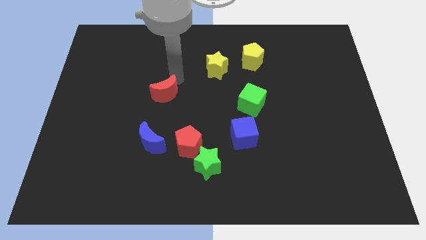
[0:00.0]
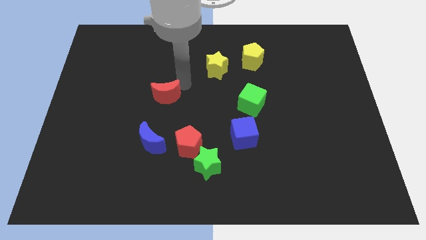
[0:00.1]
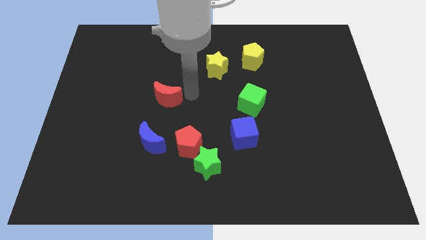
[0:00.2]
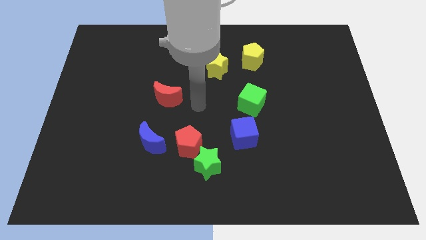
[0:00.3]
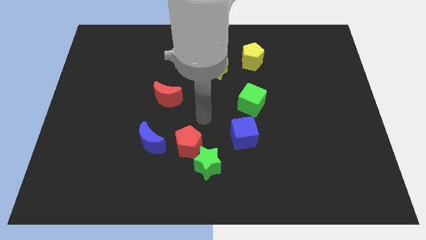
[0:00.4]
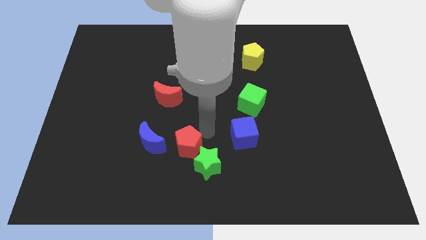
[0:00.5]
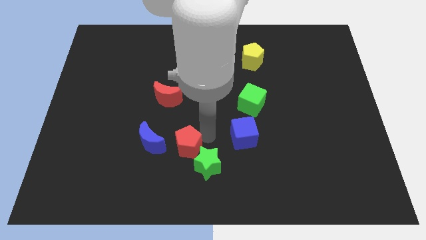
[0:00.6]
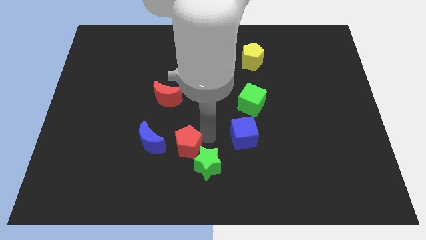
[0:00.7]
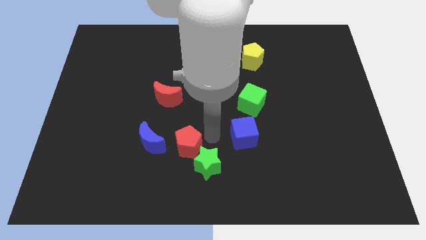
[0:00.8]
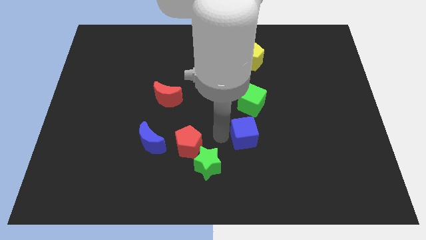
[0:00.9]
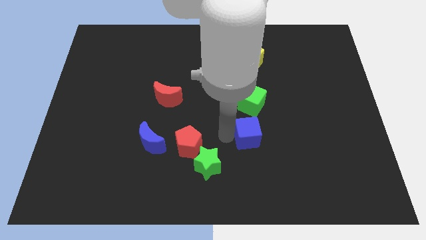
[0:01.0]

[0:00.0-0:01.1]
tap the blue cube

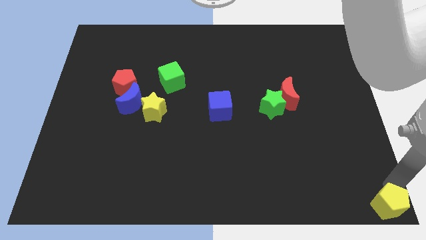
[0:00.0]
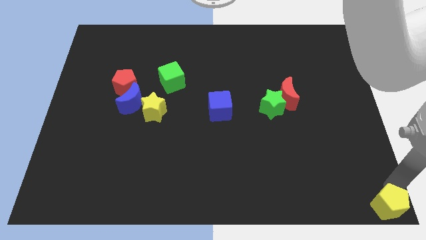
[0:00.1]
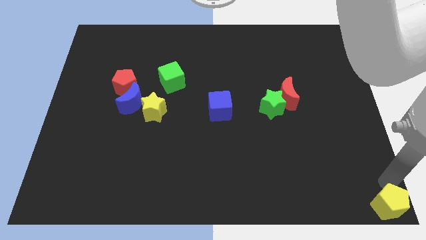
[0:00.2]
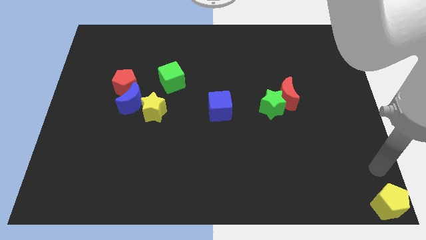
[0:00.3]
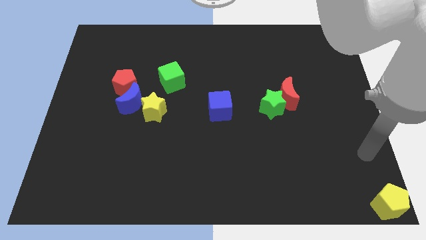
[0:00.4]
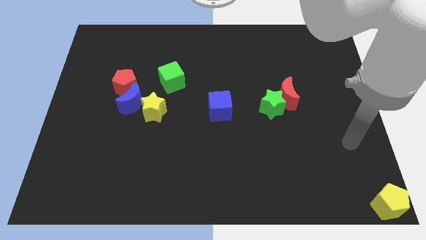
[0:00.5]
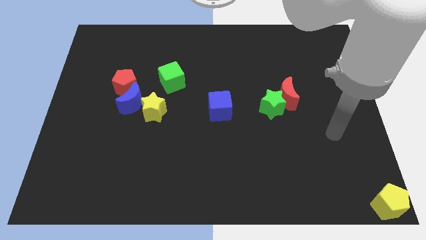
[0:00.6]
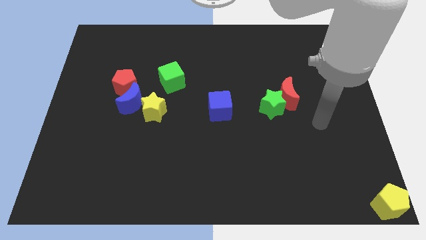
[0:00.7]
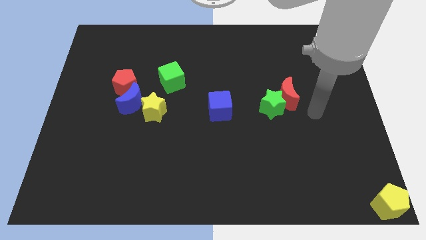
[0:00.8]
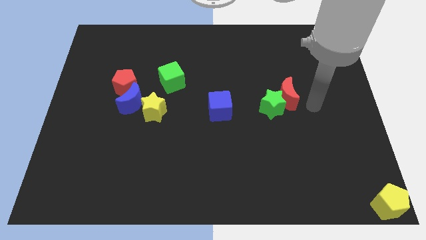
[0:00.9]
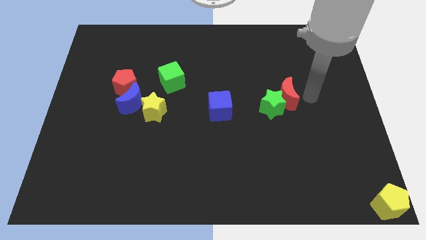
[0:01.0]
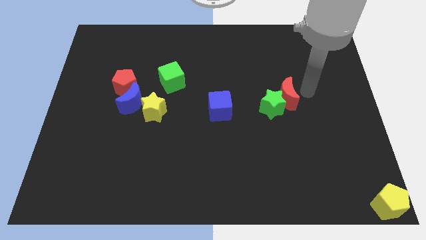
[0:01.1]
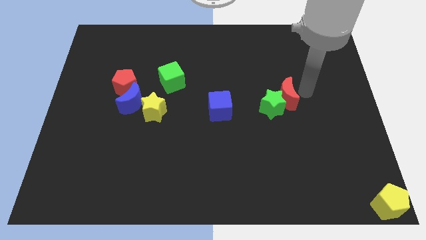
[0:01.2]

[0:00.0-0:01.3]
place your arm to the right of red moon

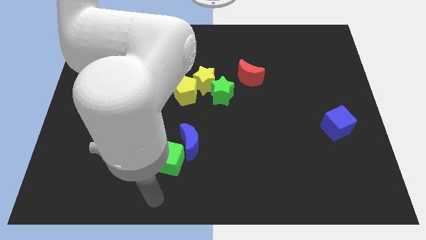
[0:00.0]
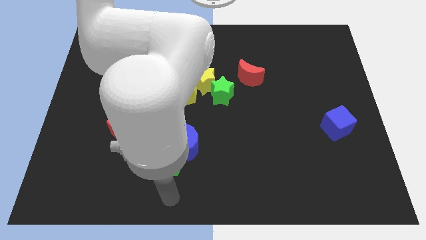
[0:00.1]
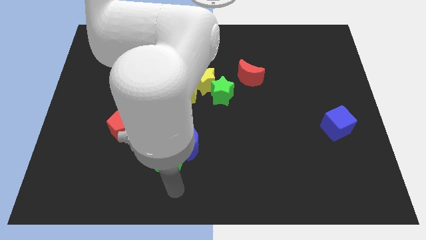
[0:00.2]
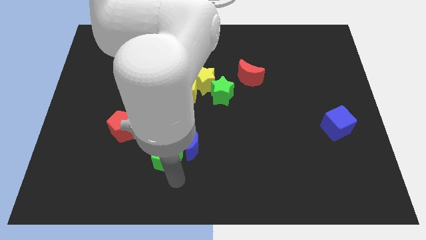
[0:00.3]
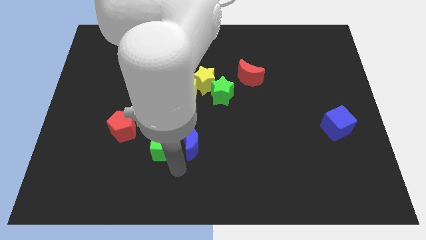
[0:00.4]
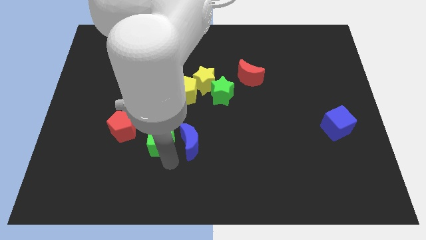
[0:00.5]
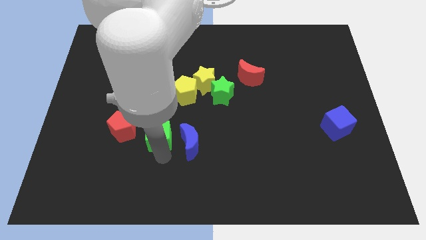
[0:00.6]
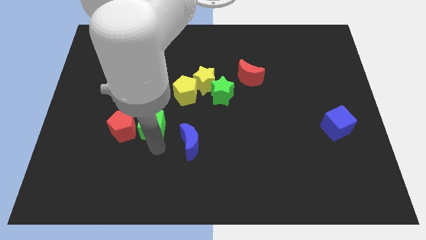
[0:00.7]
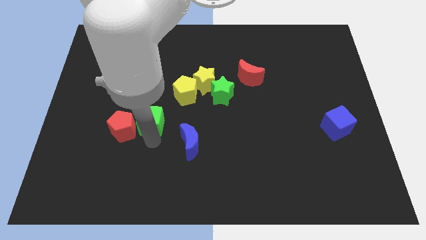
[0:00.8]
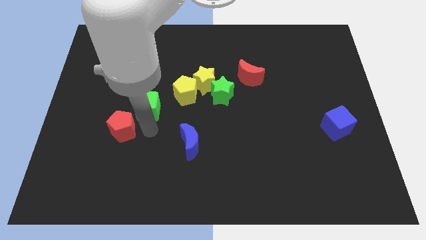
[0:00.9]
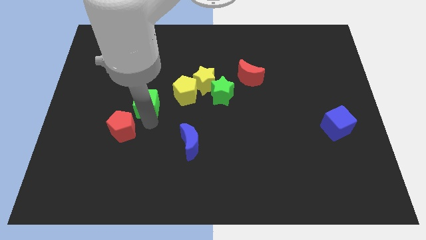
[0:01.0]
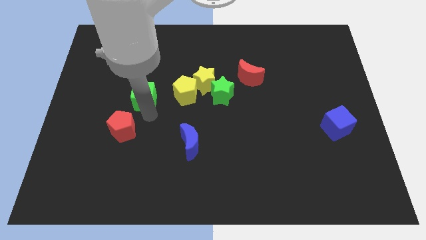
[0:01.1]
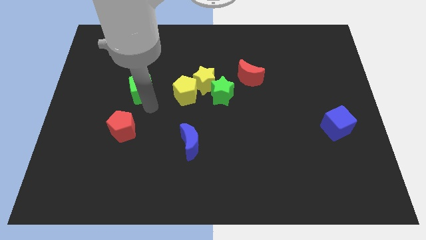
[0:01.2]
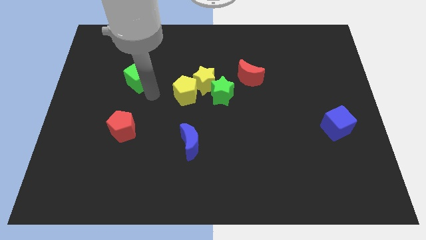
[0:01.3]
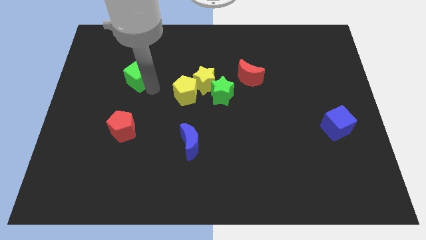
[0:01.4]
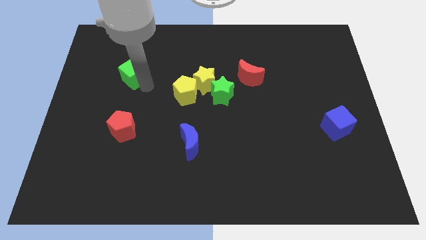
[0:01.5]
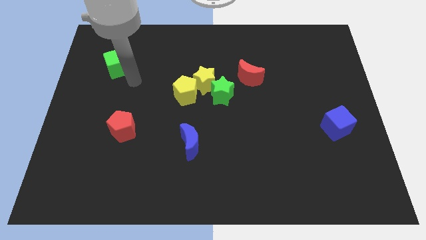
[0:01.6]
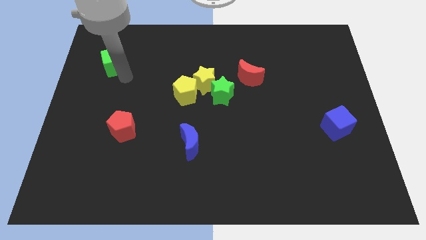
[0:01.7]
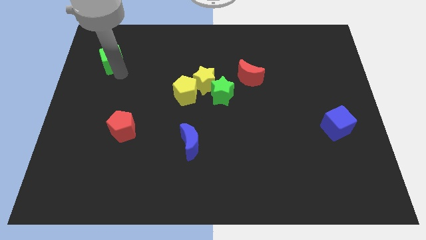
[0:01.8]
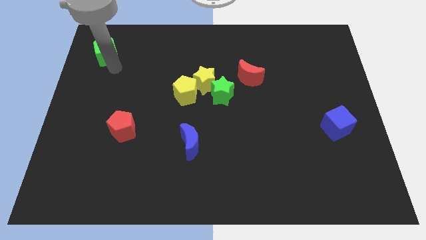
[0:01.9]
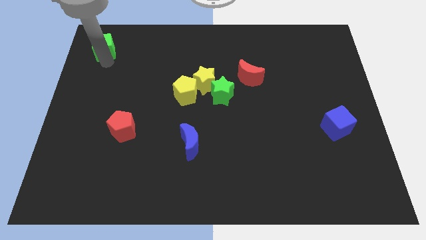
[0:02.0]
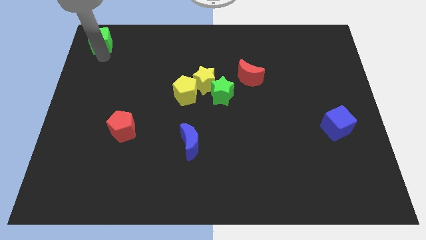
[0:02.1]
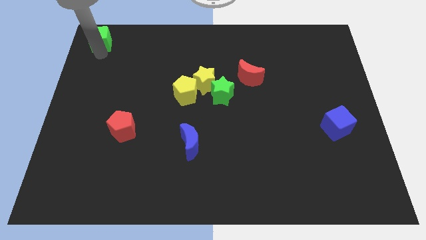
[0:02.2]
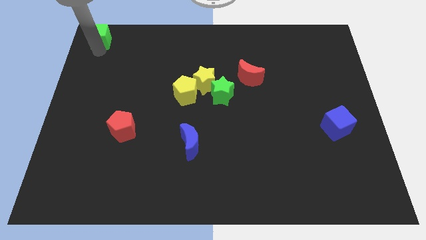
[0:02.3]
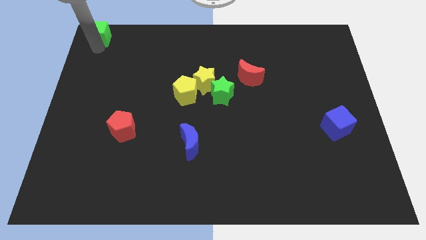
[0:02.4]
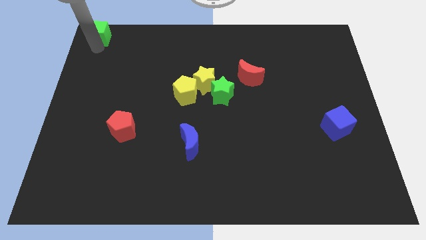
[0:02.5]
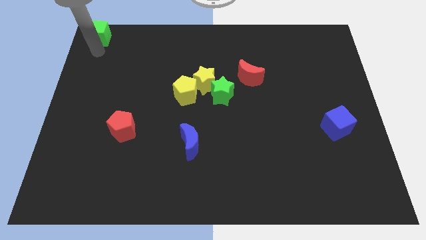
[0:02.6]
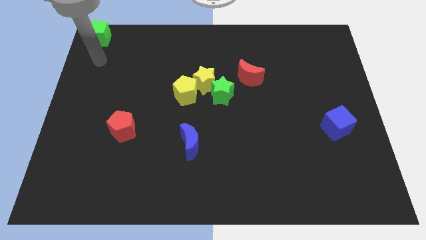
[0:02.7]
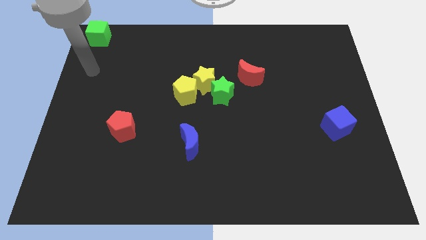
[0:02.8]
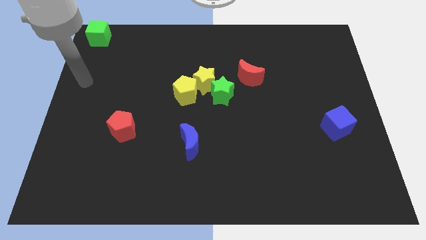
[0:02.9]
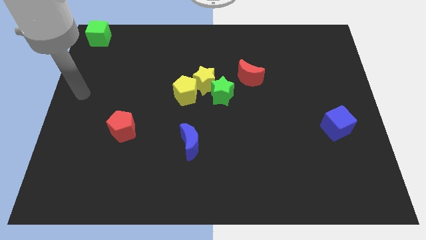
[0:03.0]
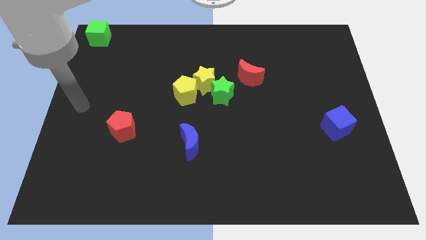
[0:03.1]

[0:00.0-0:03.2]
move green cube to the left top

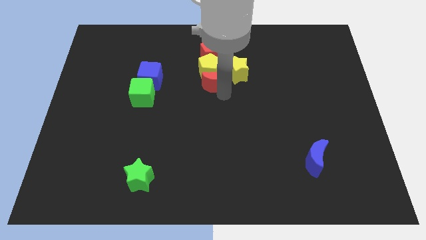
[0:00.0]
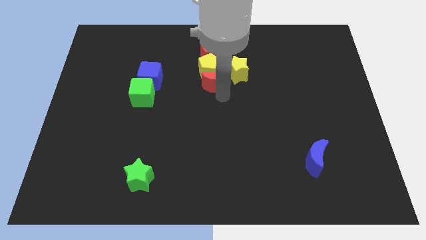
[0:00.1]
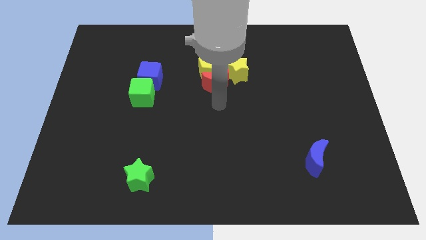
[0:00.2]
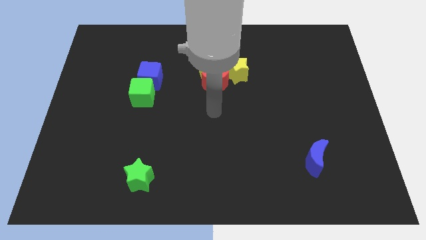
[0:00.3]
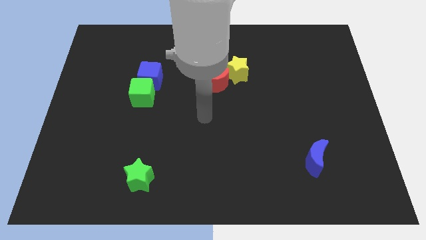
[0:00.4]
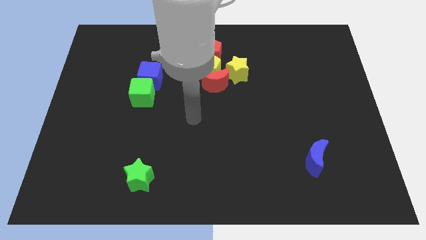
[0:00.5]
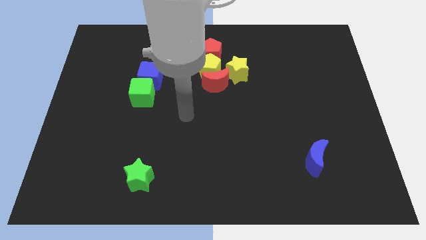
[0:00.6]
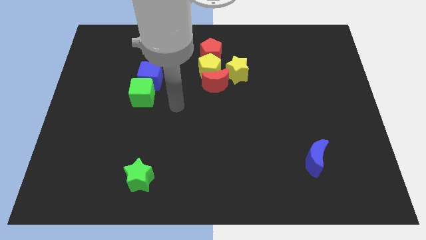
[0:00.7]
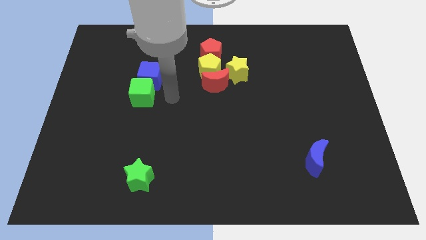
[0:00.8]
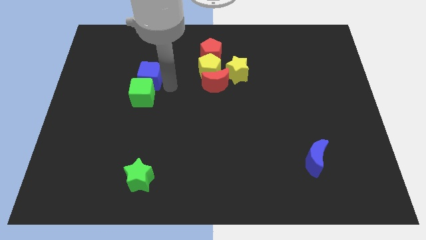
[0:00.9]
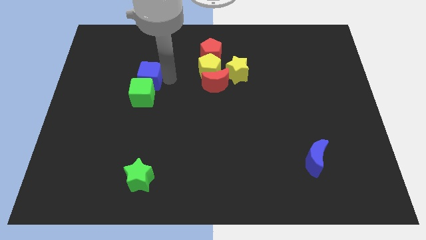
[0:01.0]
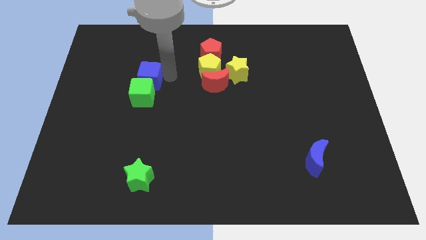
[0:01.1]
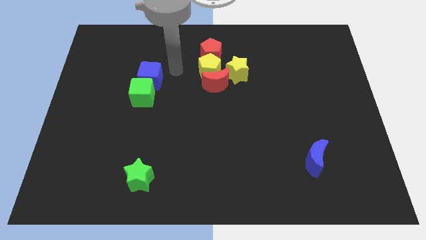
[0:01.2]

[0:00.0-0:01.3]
move your arm away from the red moon

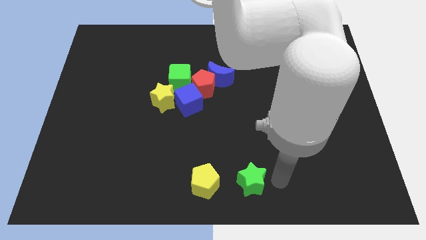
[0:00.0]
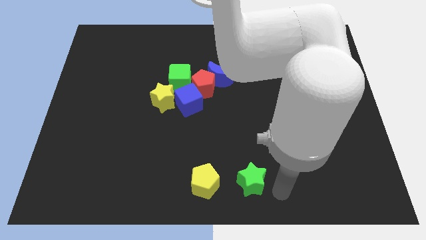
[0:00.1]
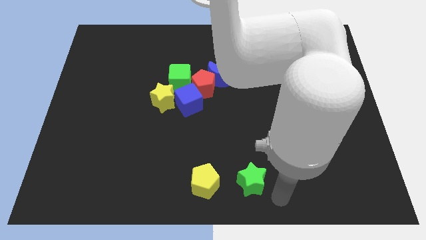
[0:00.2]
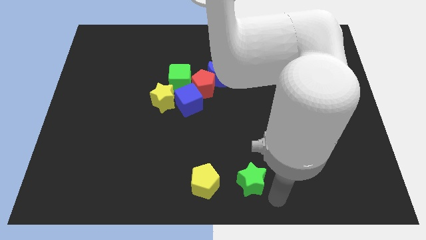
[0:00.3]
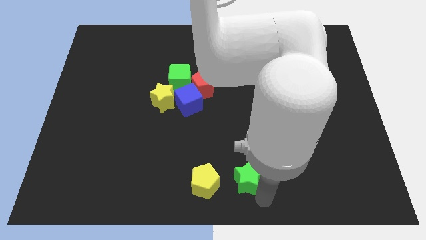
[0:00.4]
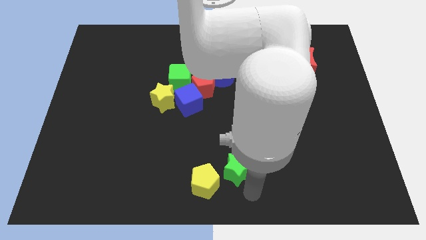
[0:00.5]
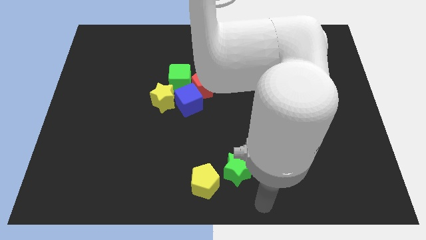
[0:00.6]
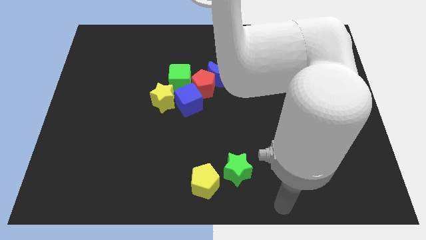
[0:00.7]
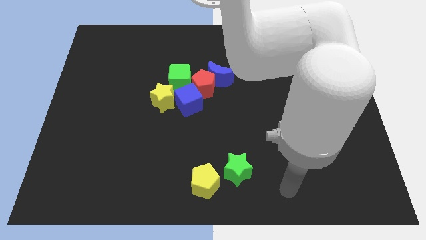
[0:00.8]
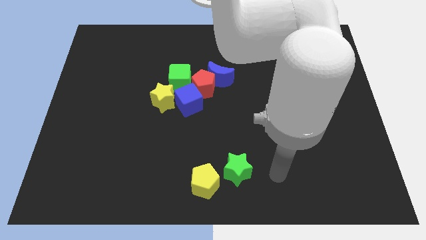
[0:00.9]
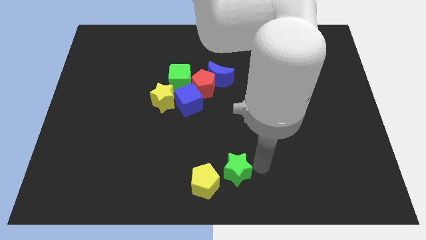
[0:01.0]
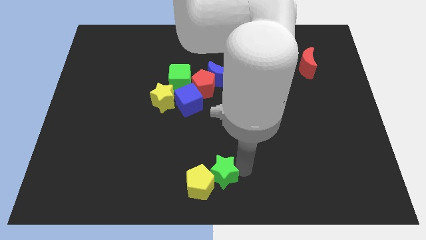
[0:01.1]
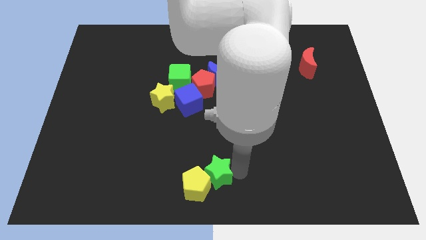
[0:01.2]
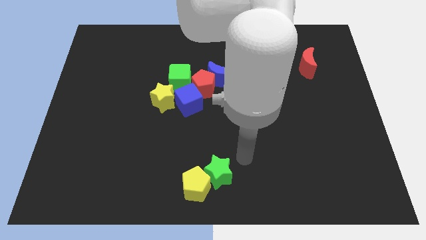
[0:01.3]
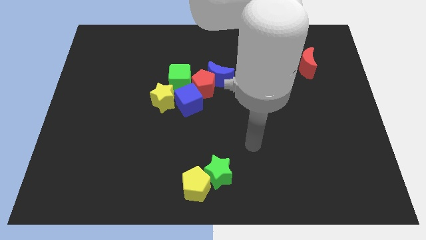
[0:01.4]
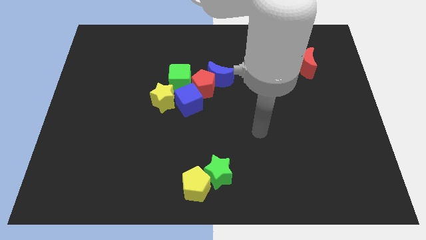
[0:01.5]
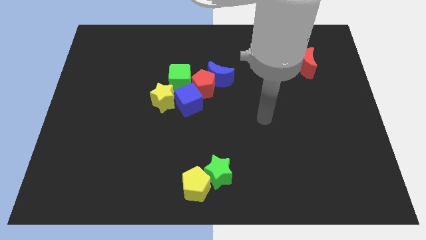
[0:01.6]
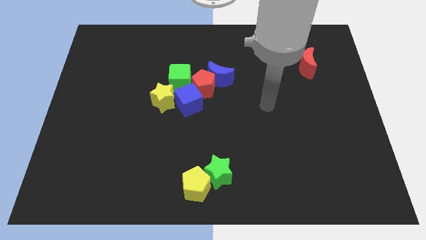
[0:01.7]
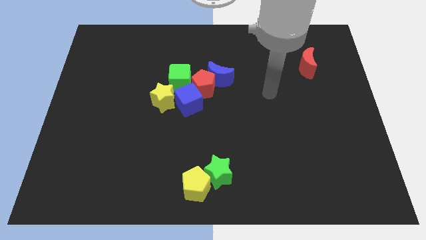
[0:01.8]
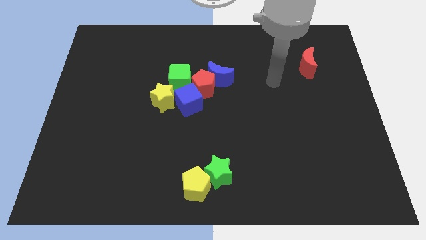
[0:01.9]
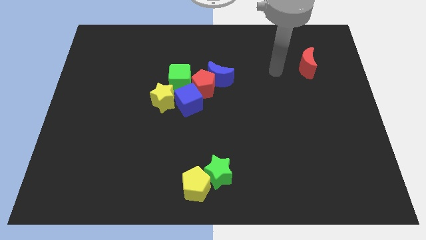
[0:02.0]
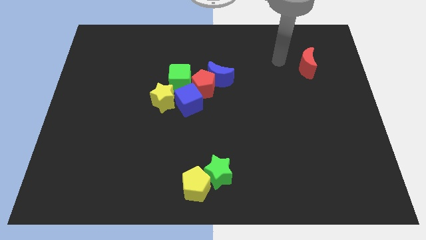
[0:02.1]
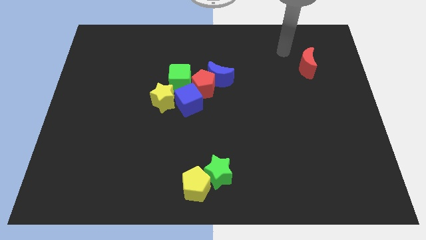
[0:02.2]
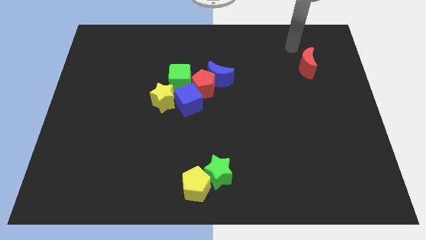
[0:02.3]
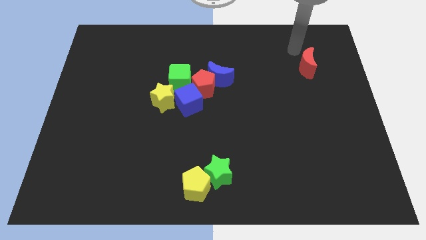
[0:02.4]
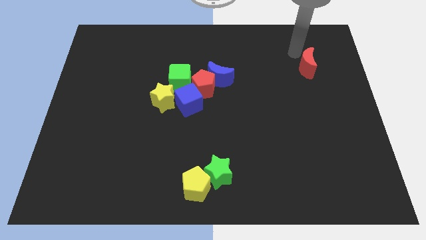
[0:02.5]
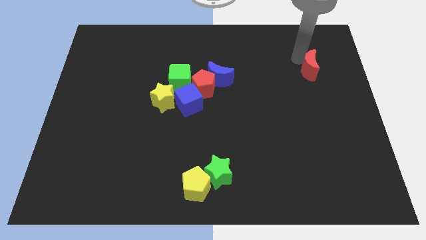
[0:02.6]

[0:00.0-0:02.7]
push the green star into yellow pentagon
